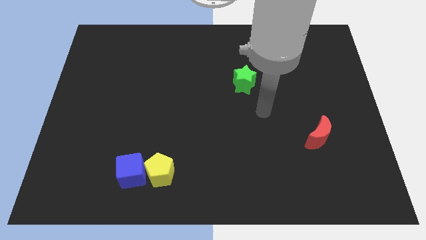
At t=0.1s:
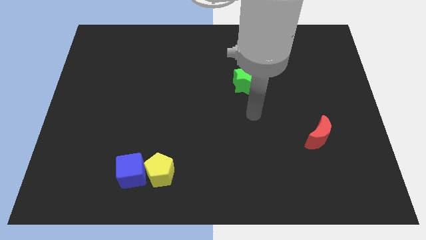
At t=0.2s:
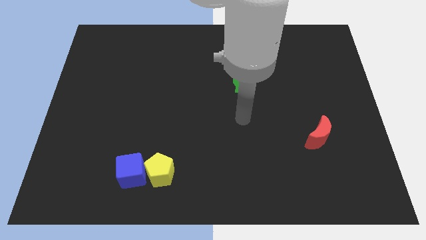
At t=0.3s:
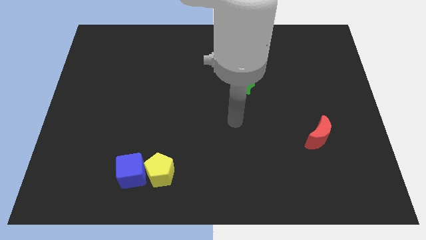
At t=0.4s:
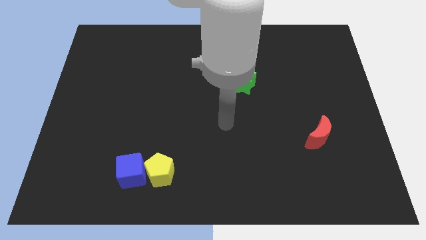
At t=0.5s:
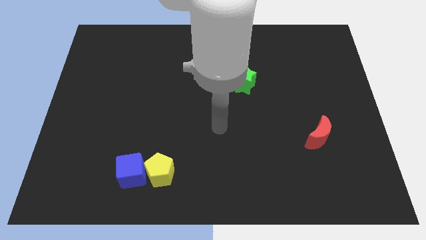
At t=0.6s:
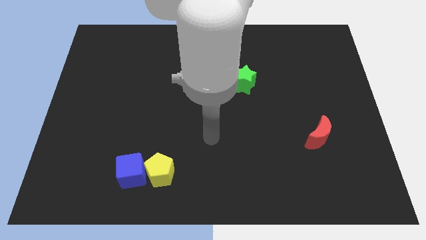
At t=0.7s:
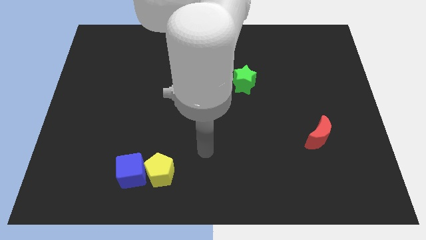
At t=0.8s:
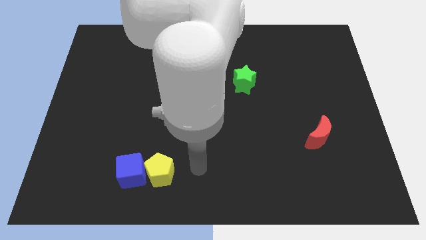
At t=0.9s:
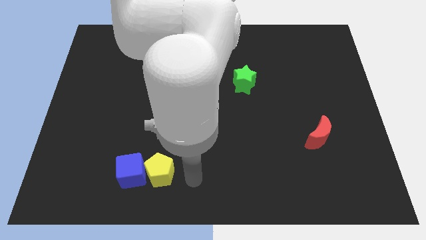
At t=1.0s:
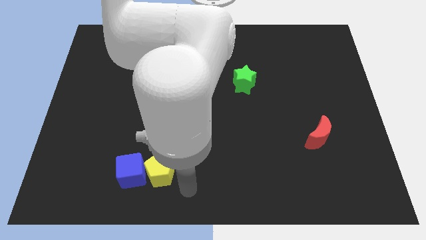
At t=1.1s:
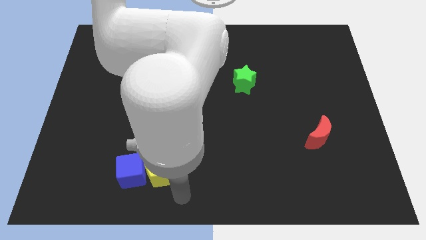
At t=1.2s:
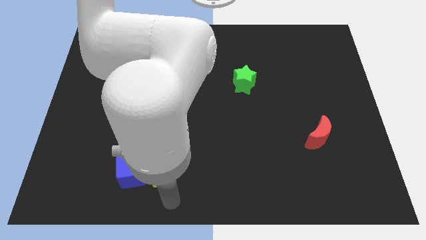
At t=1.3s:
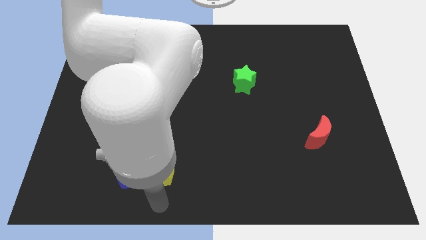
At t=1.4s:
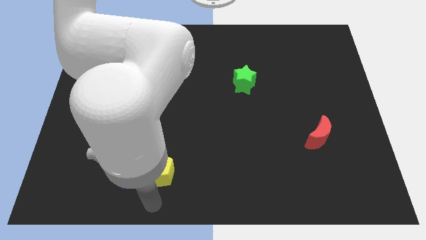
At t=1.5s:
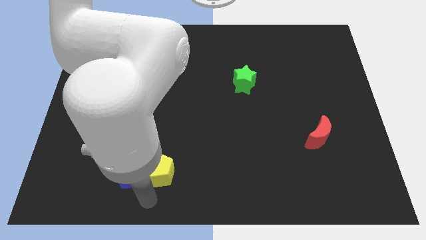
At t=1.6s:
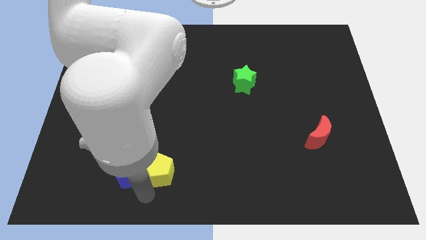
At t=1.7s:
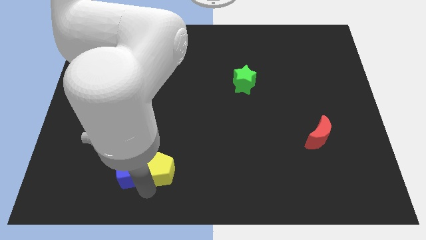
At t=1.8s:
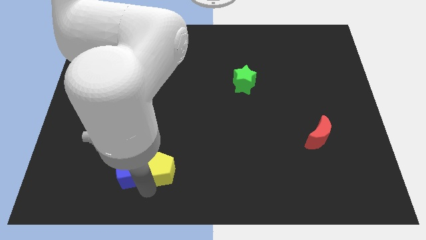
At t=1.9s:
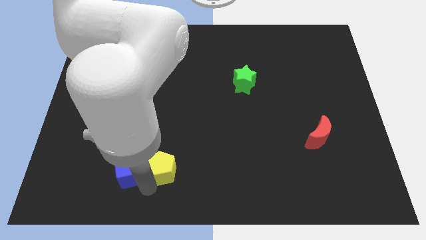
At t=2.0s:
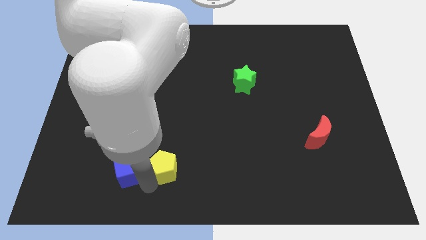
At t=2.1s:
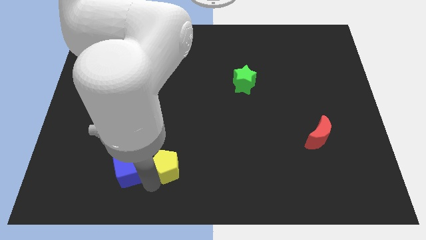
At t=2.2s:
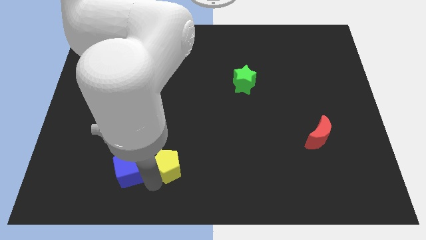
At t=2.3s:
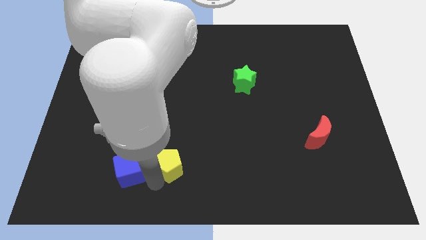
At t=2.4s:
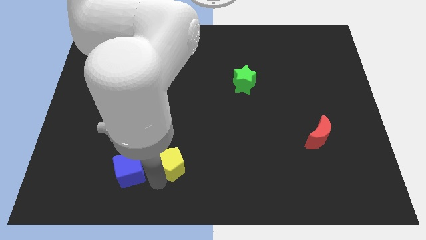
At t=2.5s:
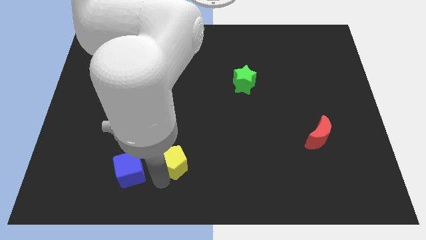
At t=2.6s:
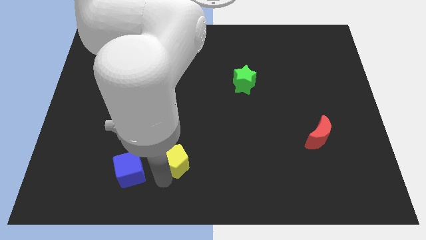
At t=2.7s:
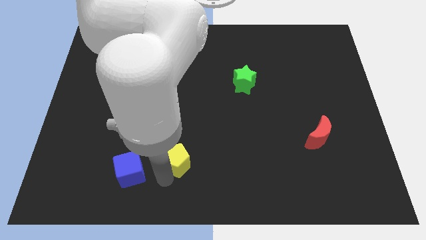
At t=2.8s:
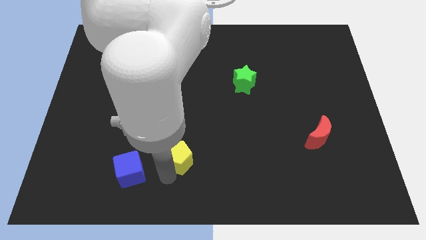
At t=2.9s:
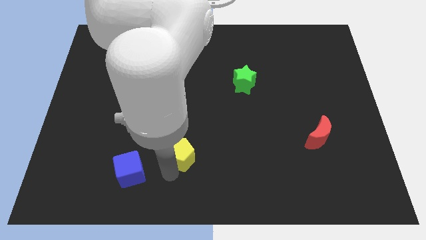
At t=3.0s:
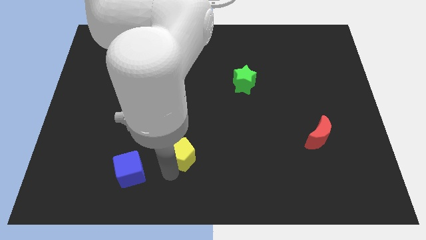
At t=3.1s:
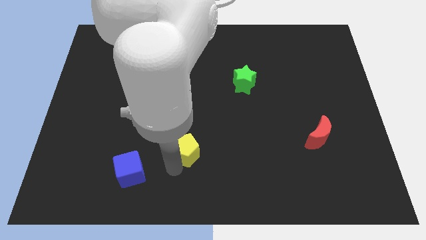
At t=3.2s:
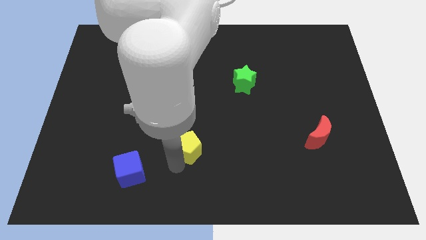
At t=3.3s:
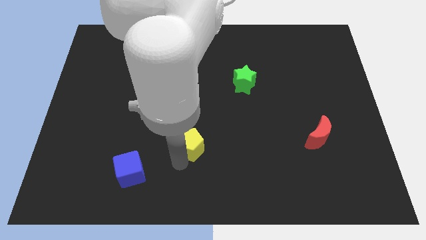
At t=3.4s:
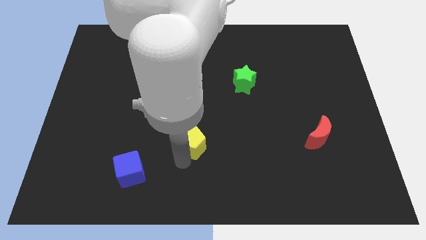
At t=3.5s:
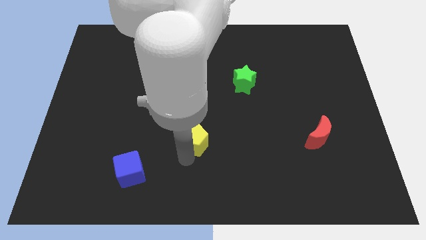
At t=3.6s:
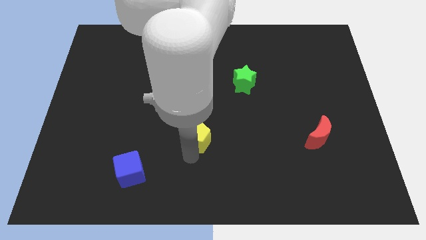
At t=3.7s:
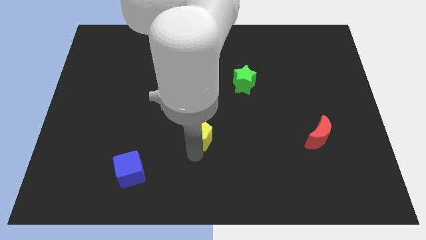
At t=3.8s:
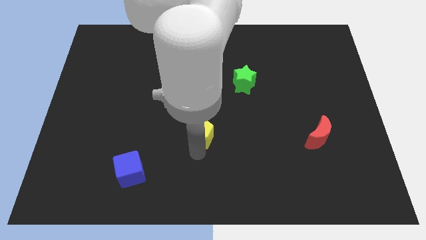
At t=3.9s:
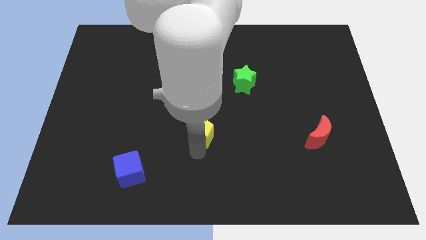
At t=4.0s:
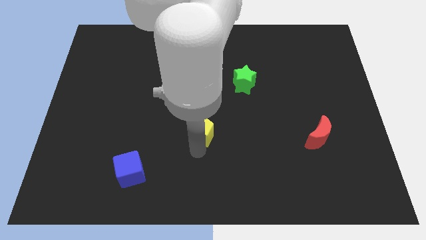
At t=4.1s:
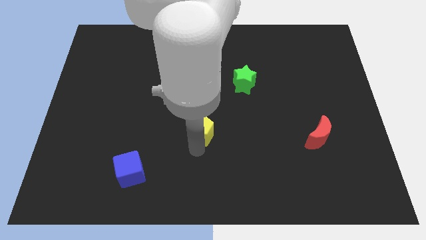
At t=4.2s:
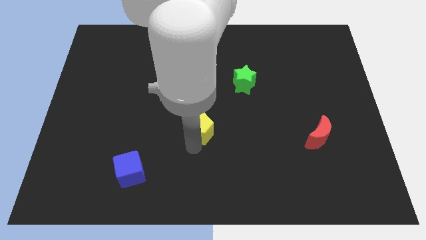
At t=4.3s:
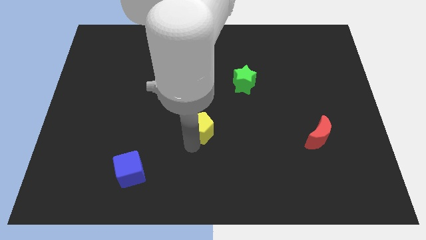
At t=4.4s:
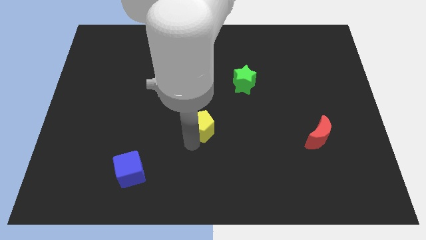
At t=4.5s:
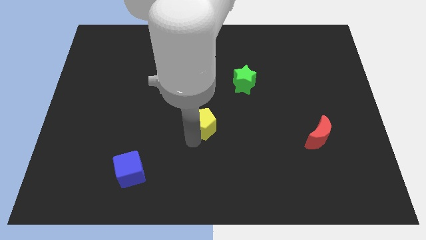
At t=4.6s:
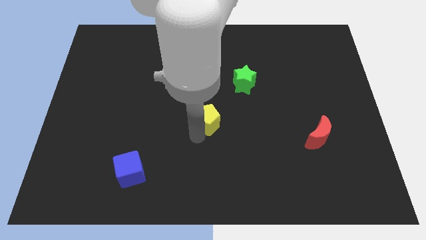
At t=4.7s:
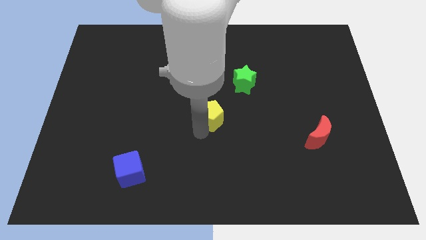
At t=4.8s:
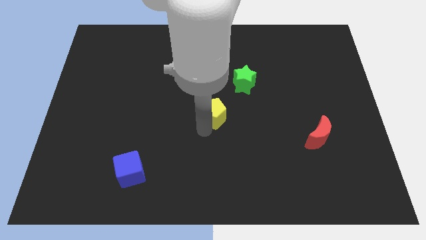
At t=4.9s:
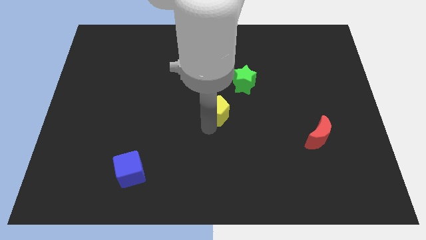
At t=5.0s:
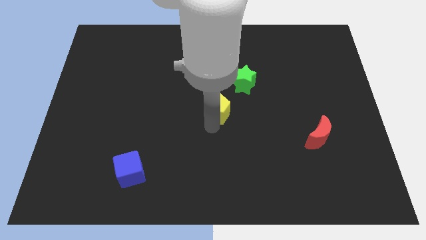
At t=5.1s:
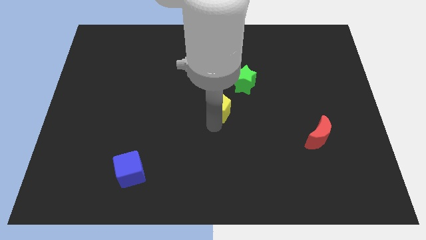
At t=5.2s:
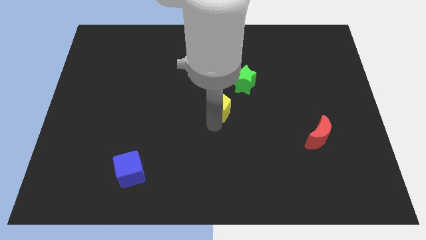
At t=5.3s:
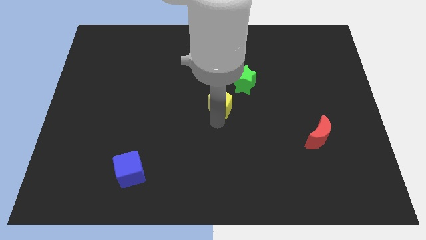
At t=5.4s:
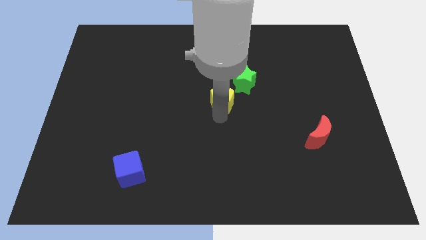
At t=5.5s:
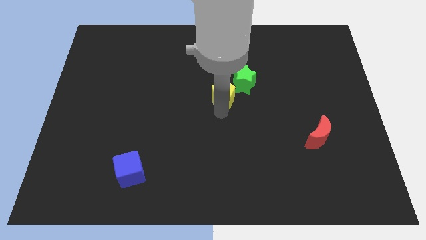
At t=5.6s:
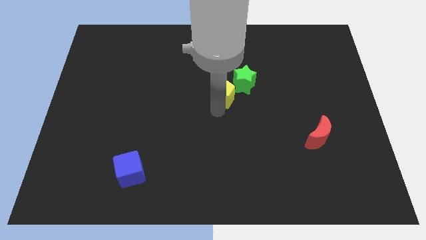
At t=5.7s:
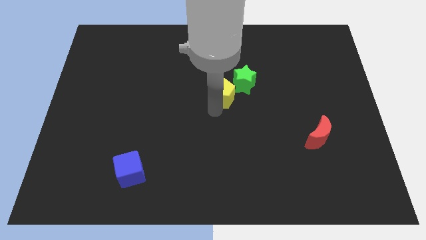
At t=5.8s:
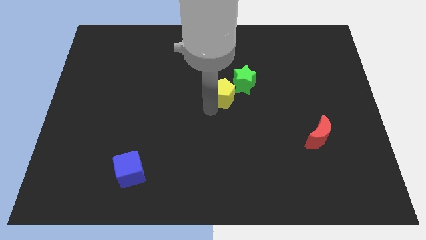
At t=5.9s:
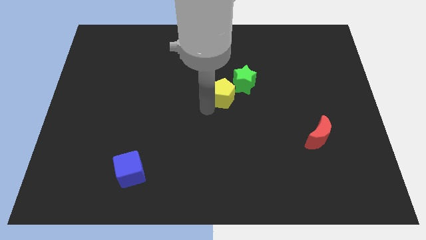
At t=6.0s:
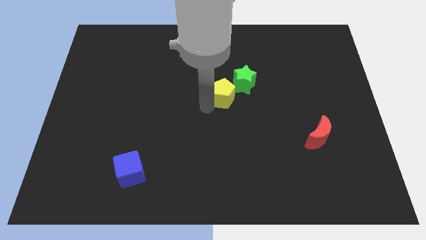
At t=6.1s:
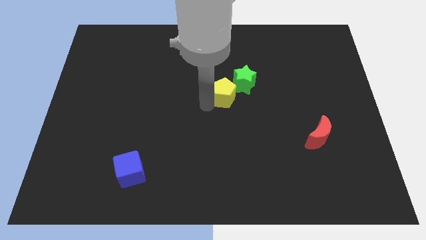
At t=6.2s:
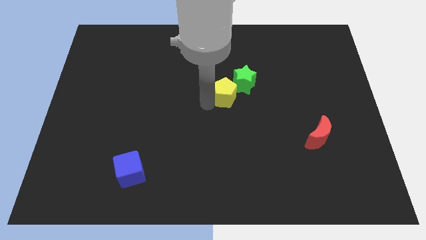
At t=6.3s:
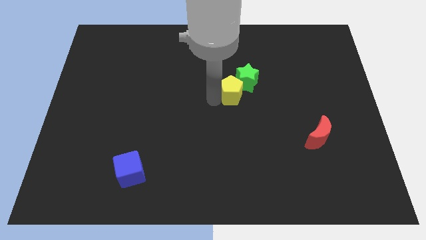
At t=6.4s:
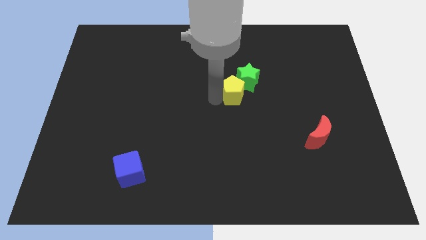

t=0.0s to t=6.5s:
put the yellow pentagon to the star

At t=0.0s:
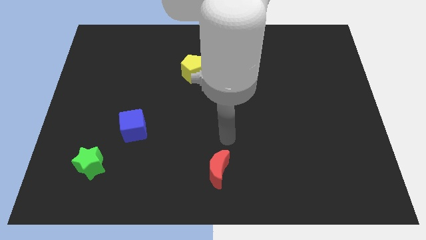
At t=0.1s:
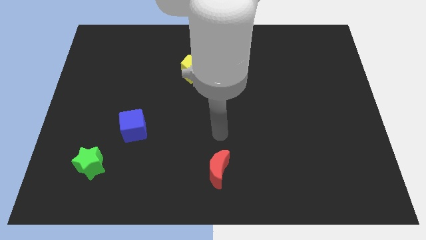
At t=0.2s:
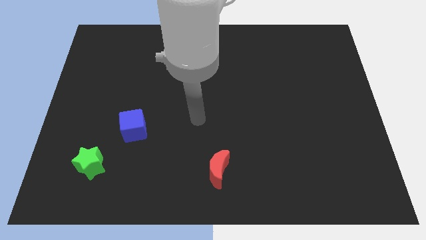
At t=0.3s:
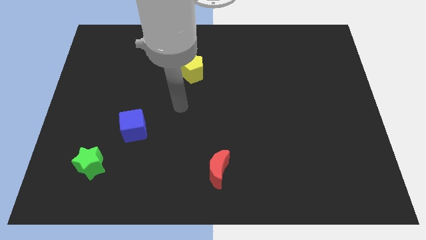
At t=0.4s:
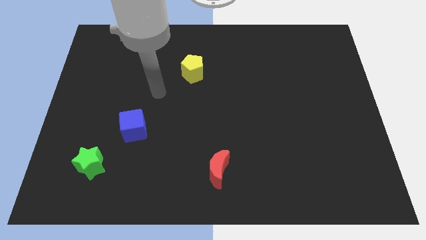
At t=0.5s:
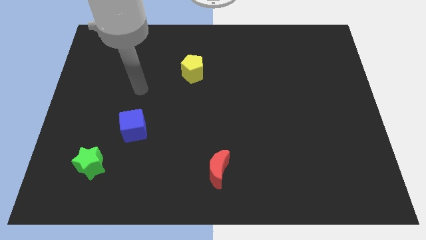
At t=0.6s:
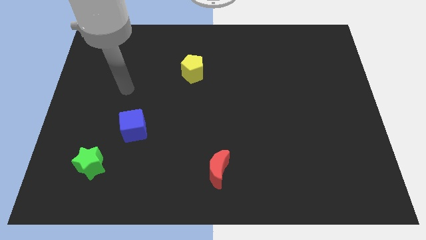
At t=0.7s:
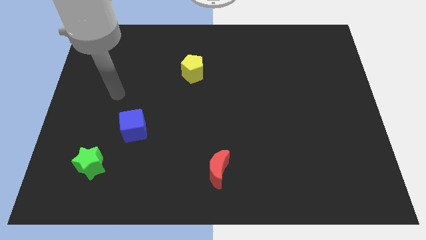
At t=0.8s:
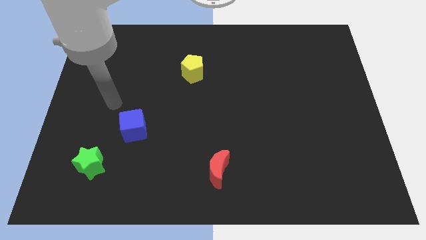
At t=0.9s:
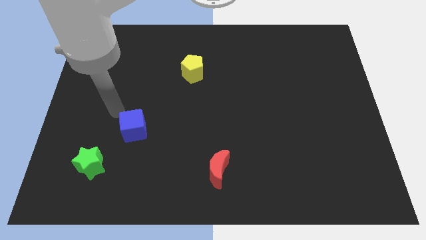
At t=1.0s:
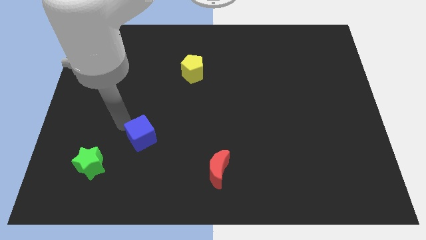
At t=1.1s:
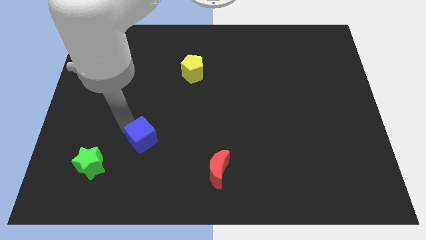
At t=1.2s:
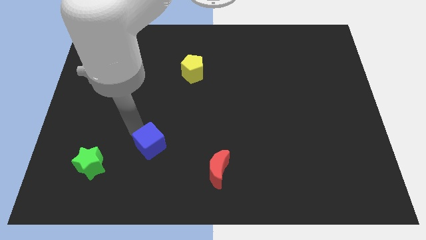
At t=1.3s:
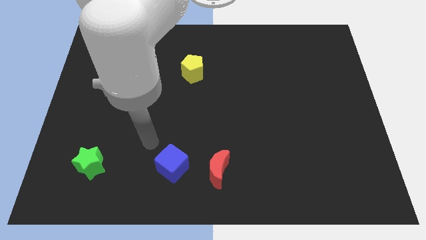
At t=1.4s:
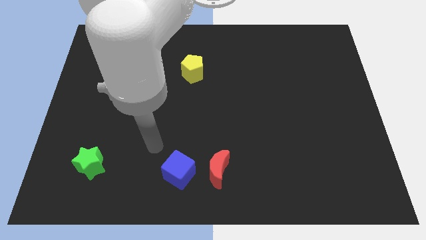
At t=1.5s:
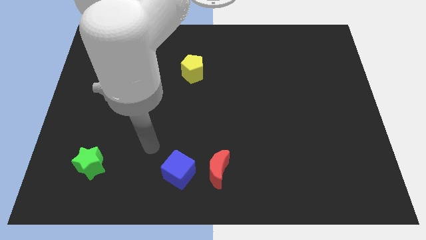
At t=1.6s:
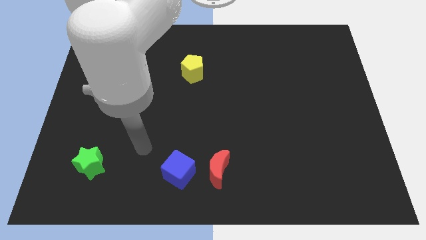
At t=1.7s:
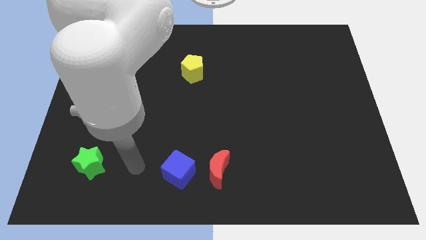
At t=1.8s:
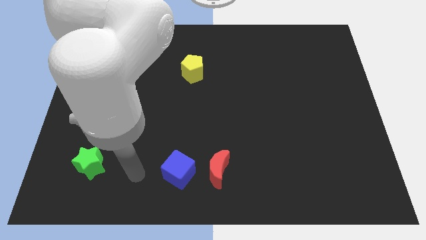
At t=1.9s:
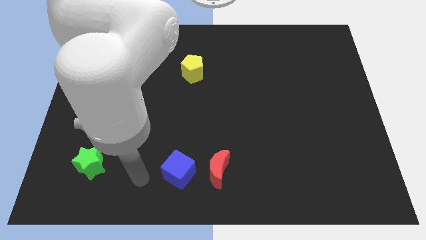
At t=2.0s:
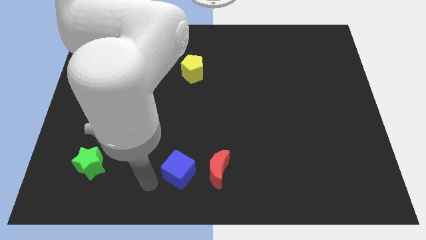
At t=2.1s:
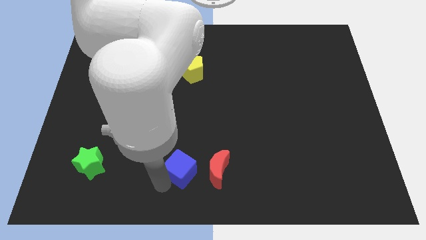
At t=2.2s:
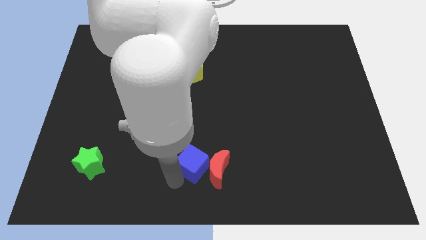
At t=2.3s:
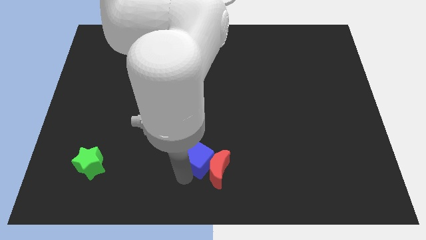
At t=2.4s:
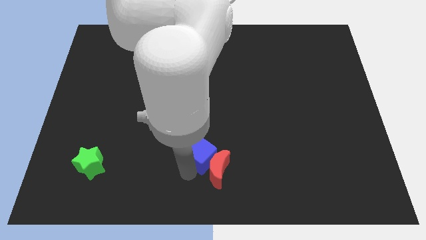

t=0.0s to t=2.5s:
move the blue block to the red moon
